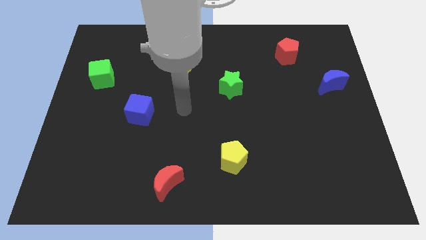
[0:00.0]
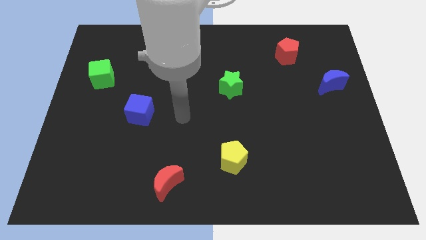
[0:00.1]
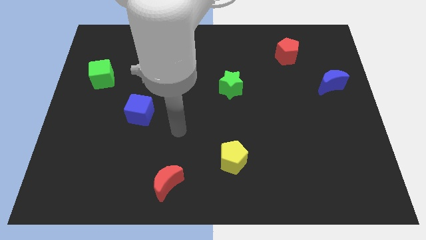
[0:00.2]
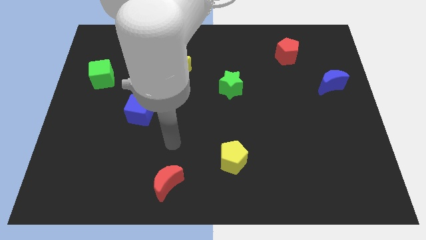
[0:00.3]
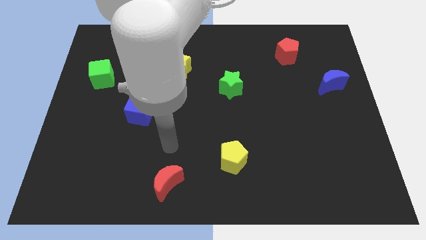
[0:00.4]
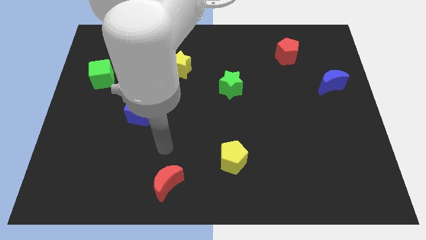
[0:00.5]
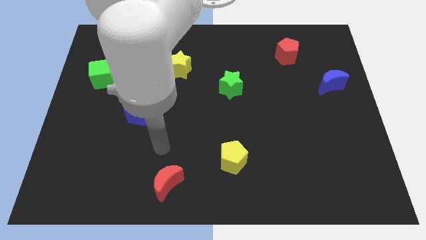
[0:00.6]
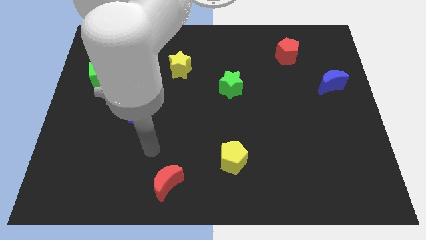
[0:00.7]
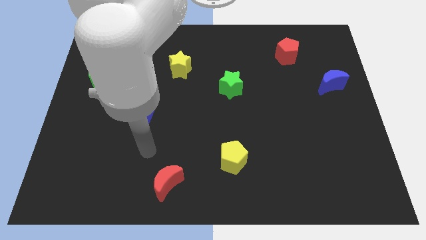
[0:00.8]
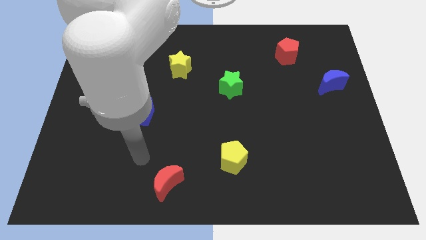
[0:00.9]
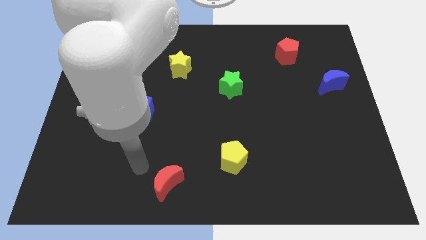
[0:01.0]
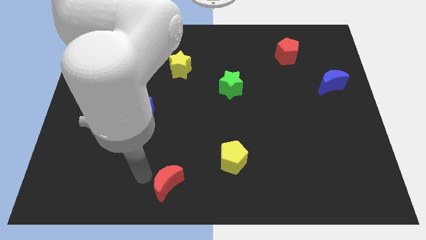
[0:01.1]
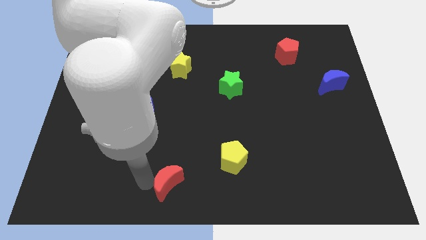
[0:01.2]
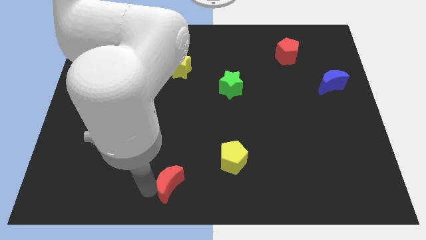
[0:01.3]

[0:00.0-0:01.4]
tap the red crescent

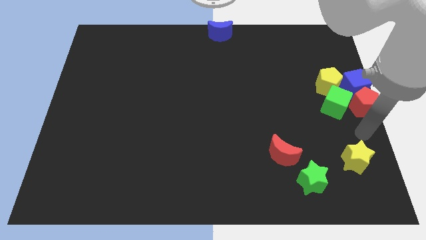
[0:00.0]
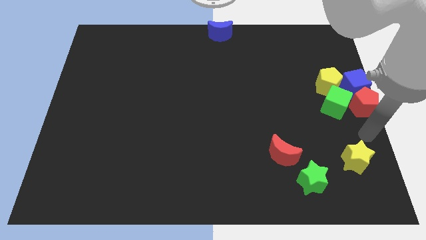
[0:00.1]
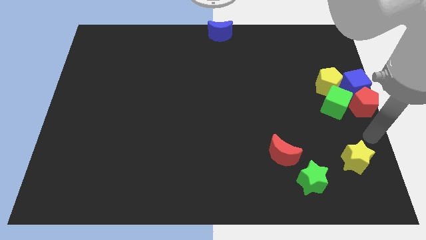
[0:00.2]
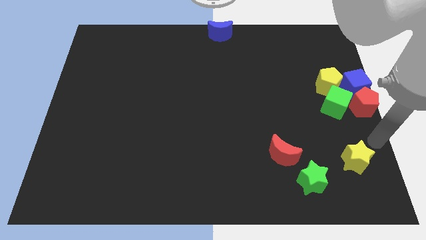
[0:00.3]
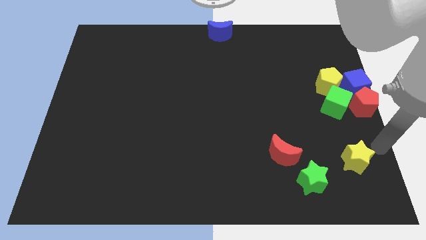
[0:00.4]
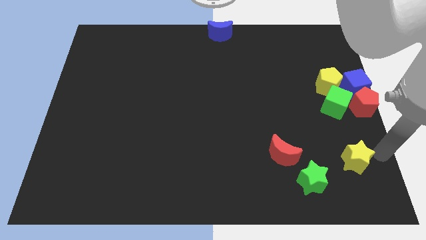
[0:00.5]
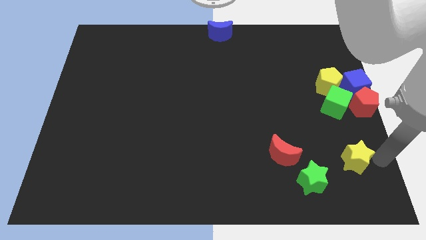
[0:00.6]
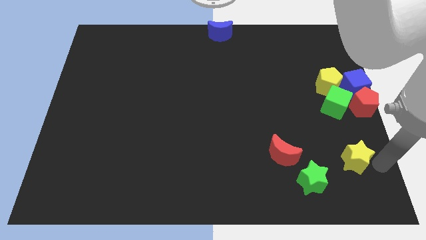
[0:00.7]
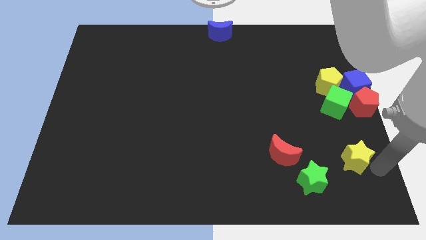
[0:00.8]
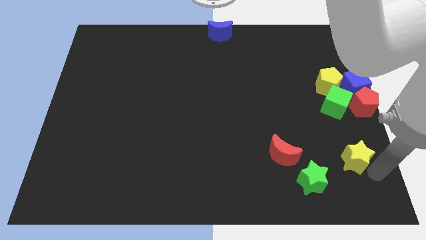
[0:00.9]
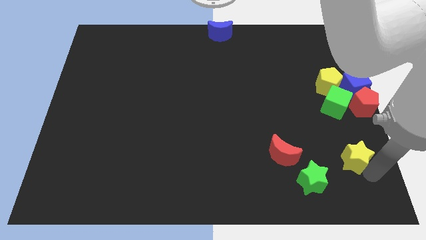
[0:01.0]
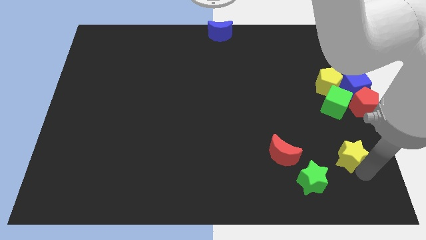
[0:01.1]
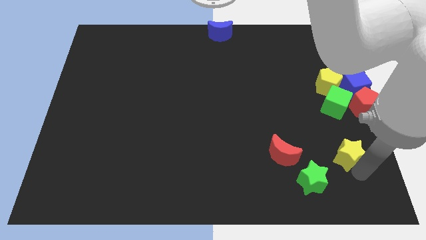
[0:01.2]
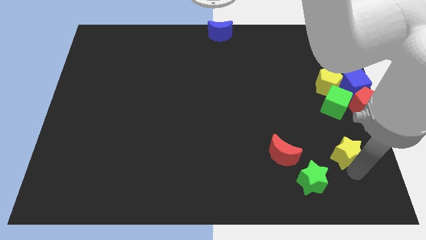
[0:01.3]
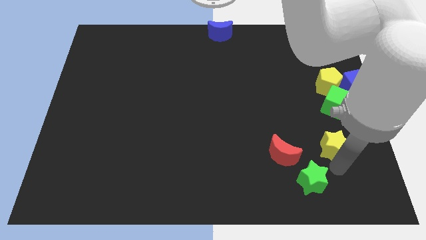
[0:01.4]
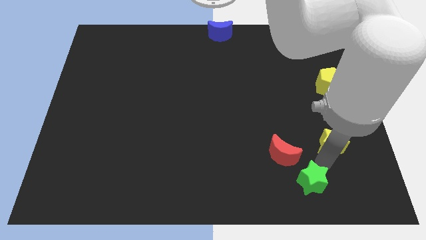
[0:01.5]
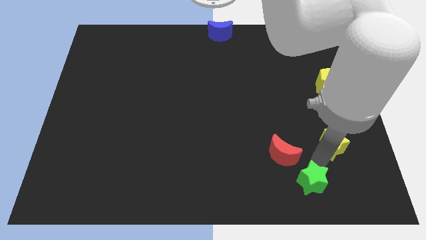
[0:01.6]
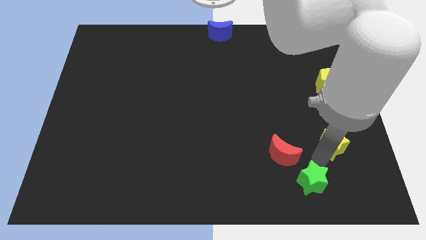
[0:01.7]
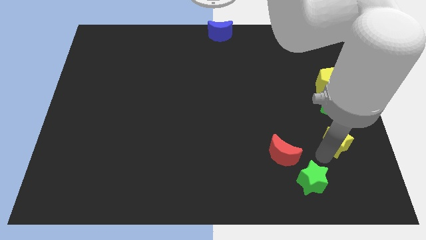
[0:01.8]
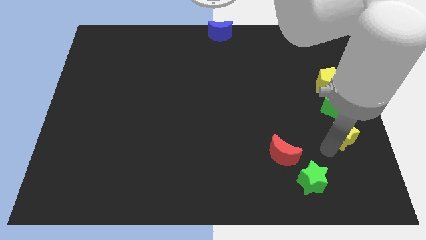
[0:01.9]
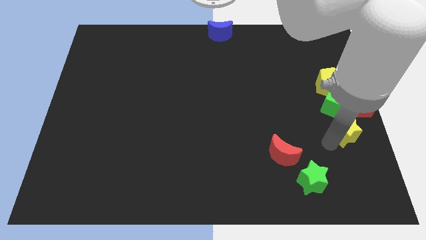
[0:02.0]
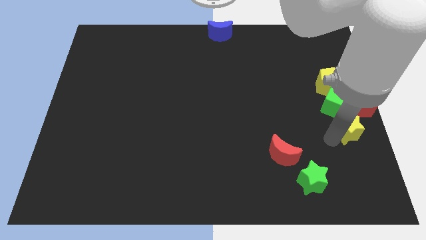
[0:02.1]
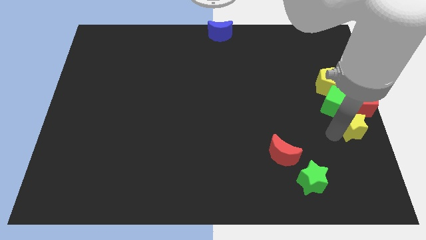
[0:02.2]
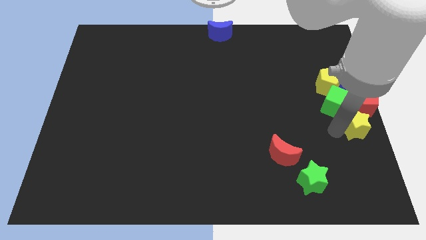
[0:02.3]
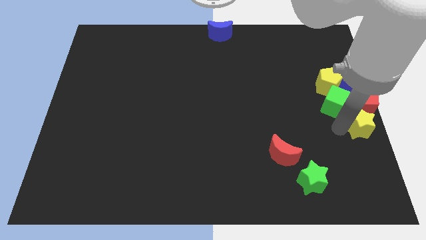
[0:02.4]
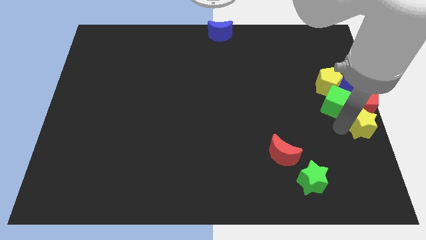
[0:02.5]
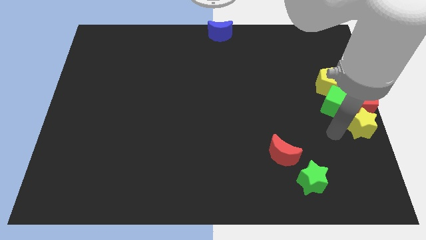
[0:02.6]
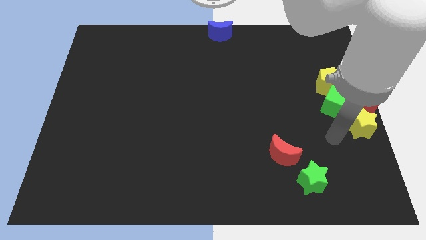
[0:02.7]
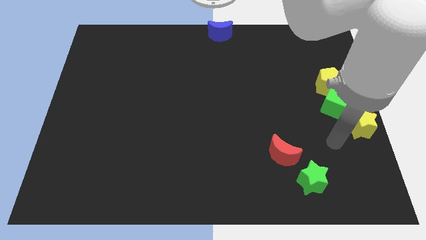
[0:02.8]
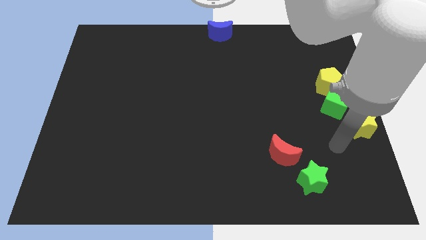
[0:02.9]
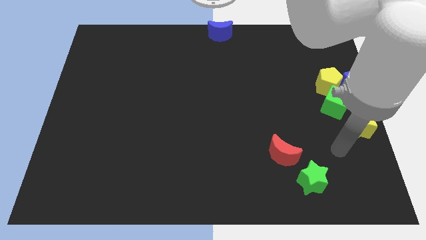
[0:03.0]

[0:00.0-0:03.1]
move yellow star below the red pentagon

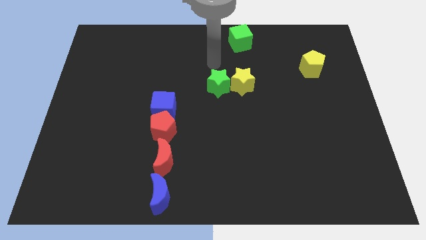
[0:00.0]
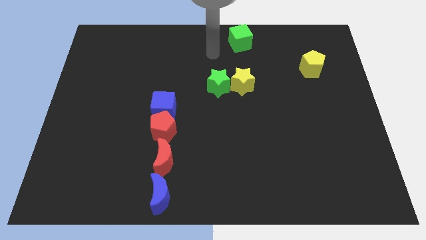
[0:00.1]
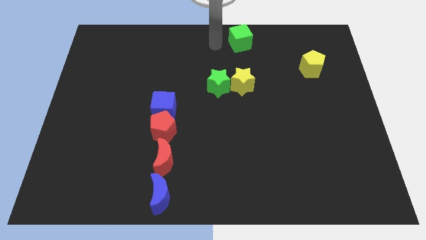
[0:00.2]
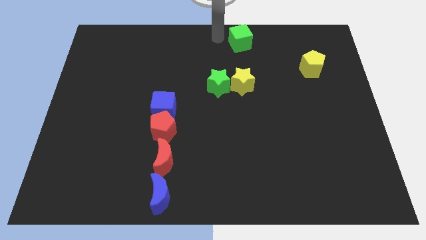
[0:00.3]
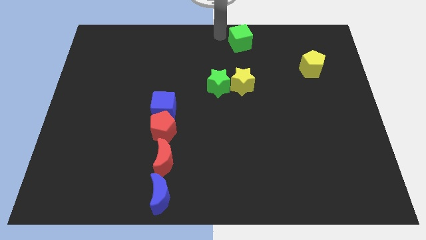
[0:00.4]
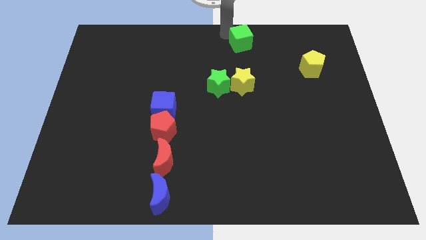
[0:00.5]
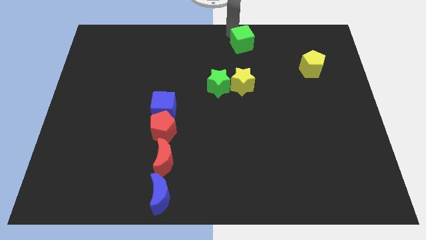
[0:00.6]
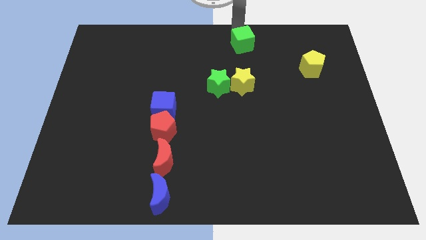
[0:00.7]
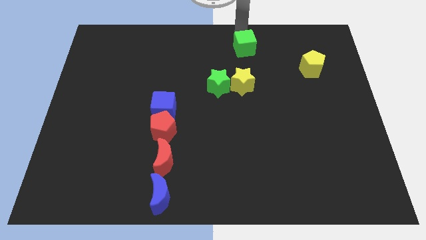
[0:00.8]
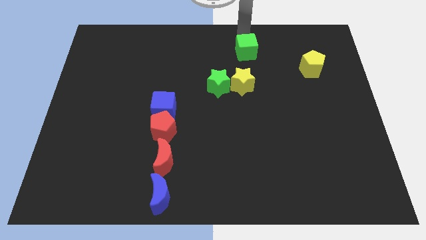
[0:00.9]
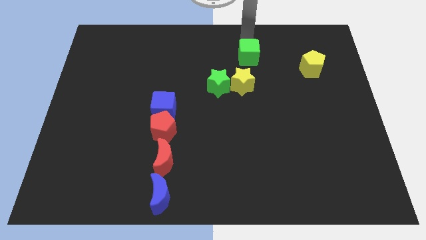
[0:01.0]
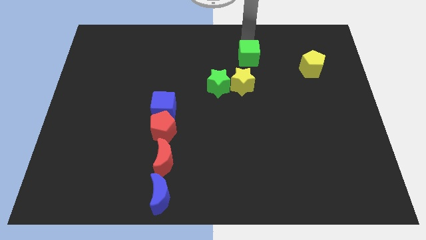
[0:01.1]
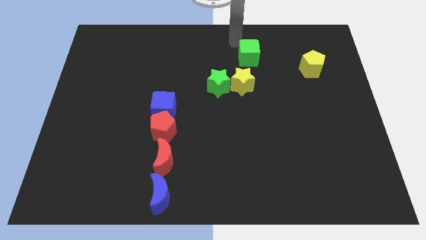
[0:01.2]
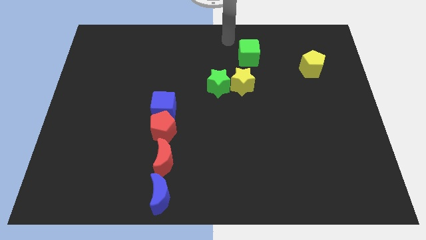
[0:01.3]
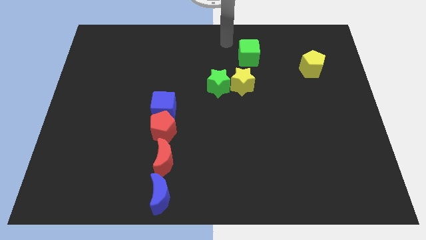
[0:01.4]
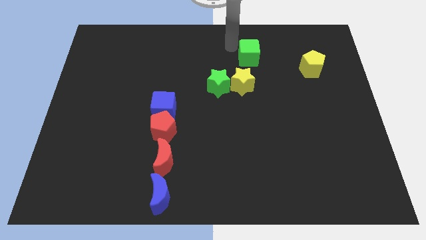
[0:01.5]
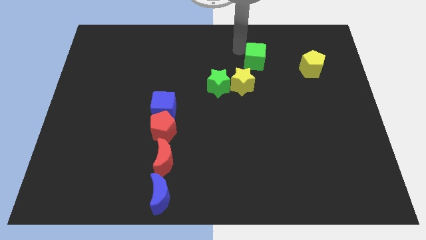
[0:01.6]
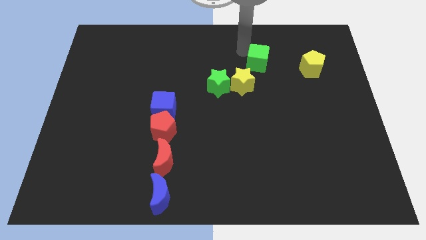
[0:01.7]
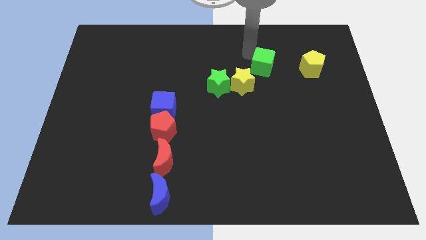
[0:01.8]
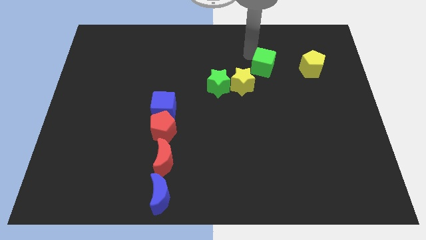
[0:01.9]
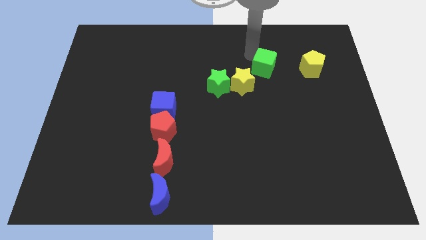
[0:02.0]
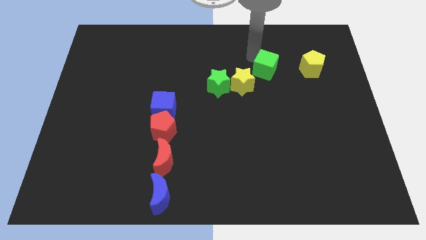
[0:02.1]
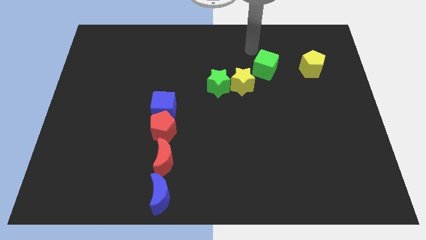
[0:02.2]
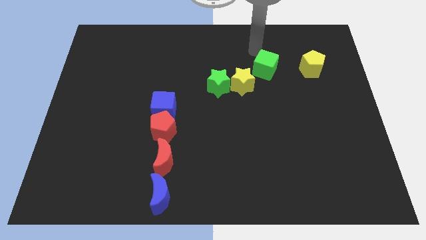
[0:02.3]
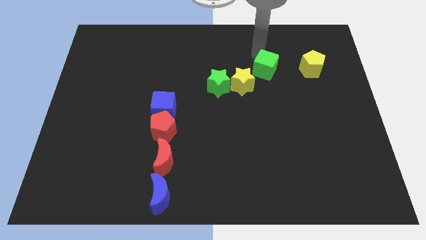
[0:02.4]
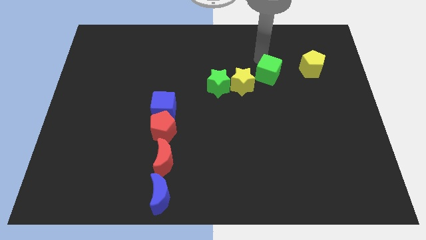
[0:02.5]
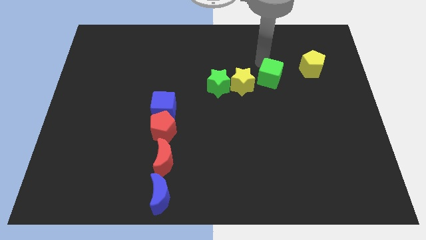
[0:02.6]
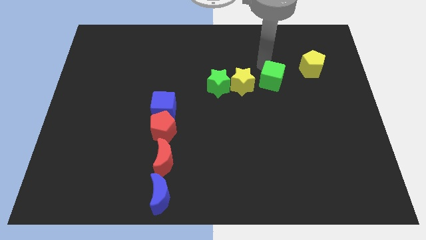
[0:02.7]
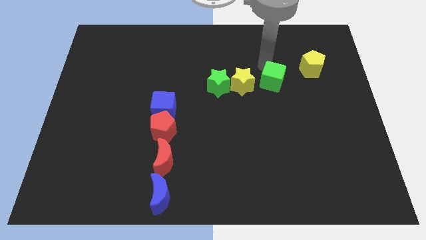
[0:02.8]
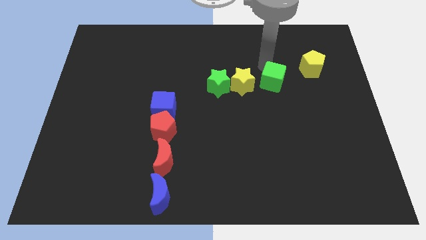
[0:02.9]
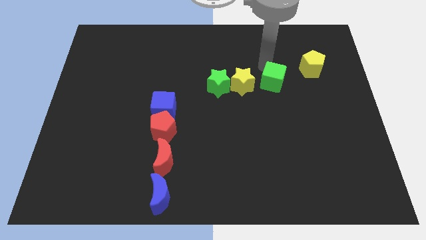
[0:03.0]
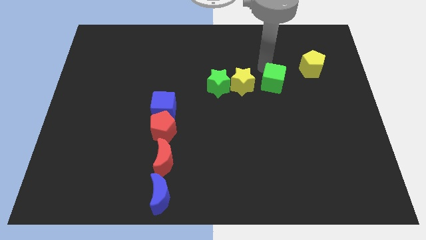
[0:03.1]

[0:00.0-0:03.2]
place the green cube diagonal to the right of the yellow star

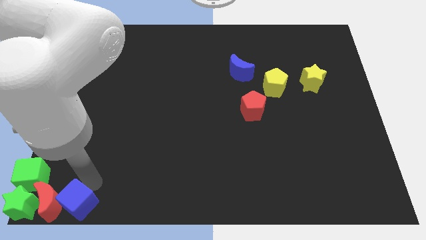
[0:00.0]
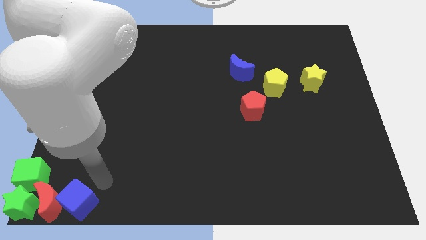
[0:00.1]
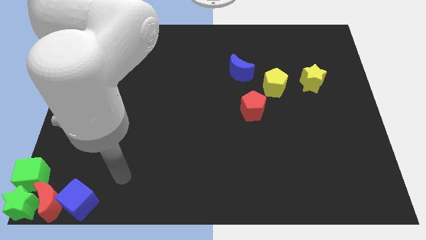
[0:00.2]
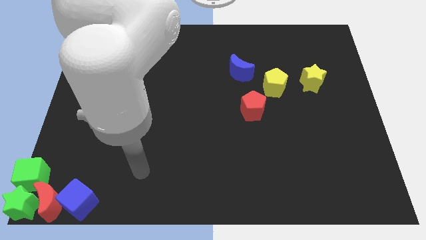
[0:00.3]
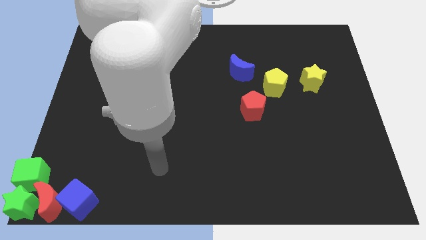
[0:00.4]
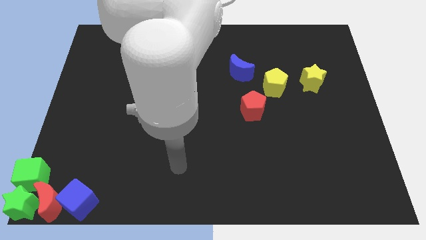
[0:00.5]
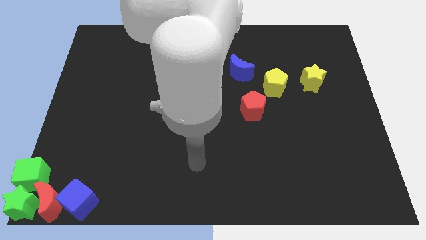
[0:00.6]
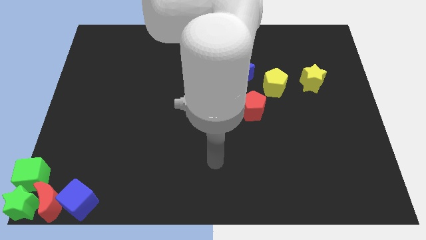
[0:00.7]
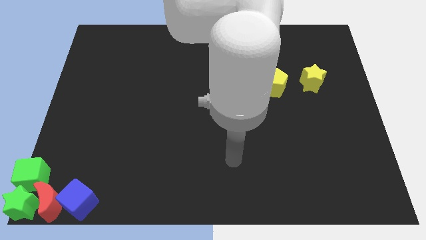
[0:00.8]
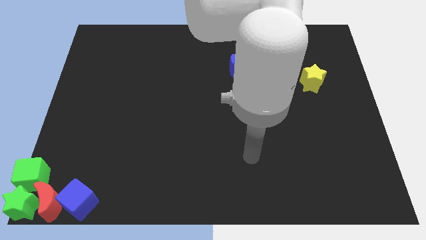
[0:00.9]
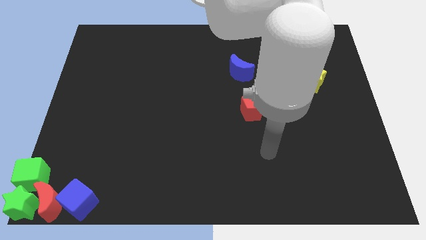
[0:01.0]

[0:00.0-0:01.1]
move the arm away from the blue cube

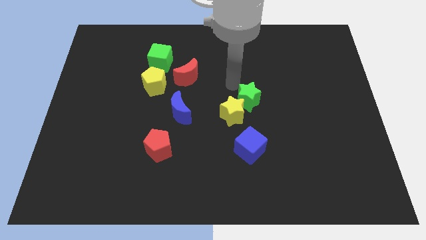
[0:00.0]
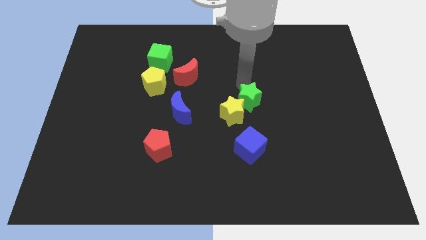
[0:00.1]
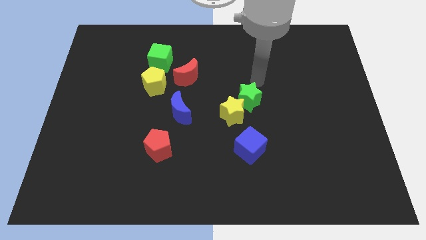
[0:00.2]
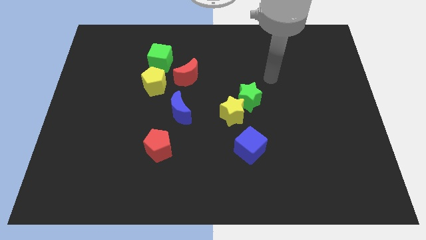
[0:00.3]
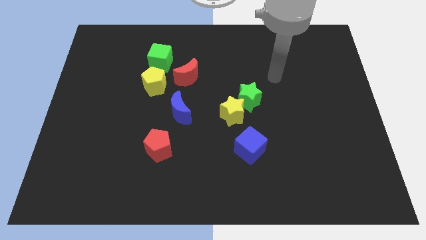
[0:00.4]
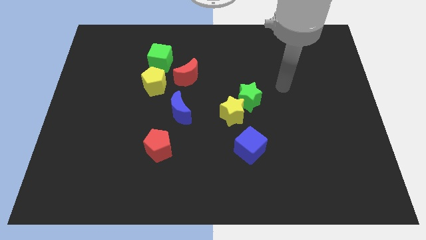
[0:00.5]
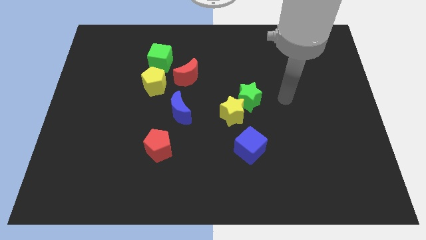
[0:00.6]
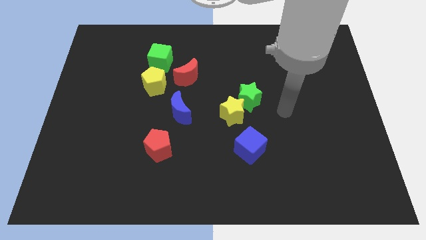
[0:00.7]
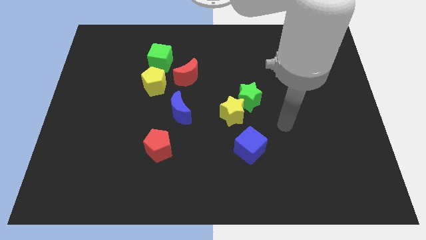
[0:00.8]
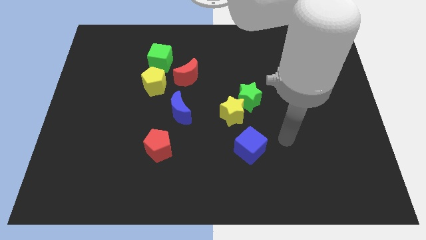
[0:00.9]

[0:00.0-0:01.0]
adjust the green star diagonally to the top right of the yellow star
